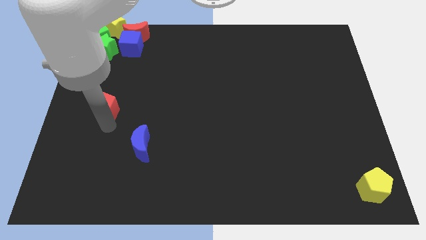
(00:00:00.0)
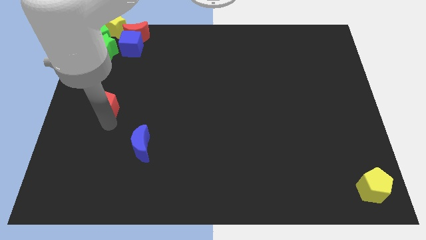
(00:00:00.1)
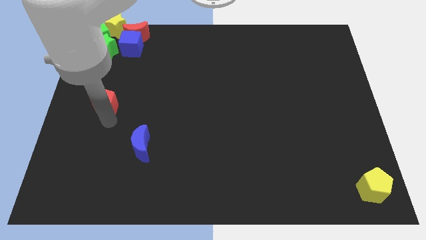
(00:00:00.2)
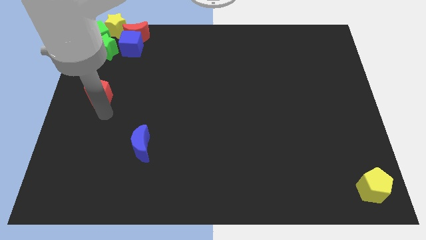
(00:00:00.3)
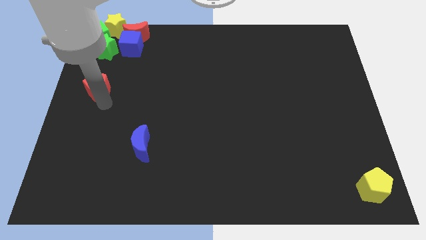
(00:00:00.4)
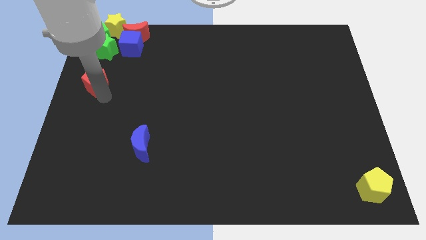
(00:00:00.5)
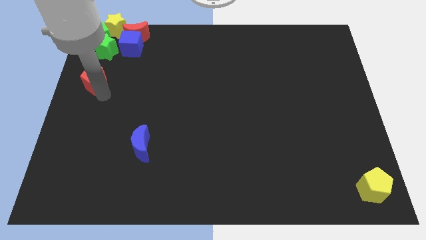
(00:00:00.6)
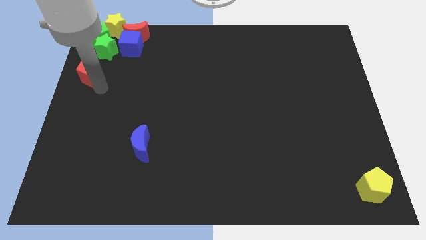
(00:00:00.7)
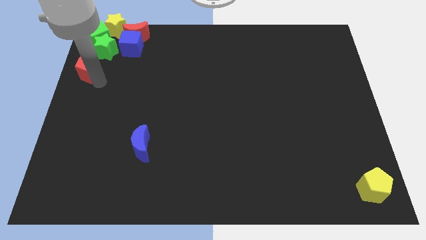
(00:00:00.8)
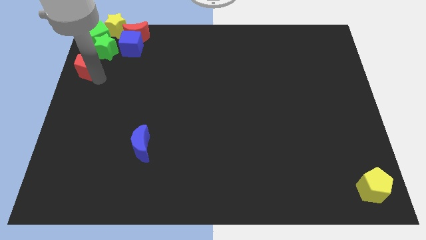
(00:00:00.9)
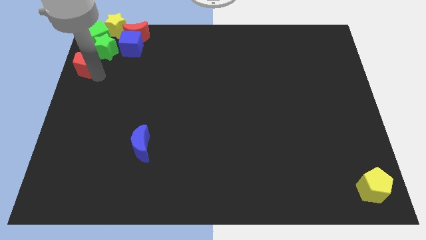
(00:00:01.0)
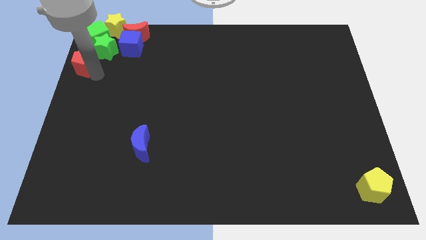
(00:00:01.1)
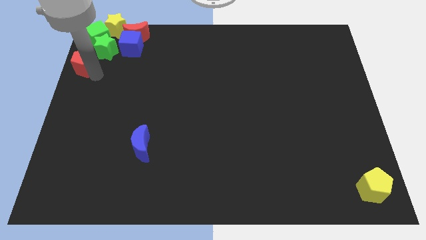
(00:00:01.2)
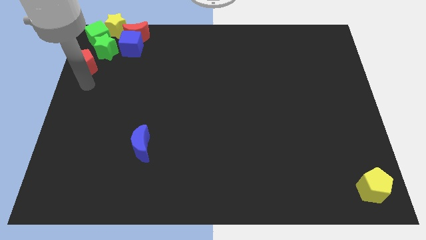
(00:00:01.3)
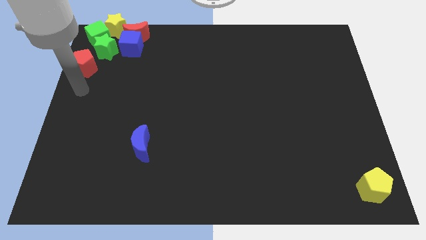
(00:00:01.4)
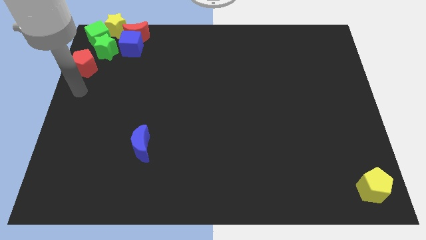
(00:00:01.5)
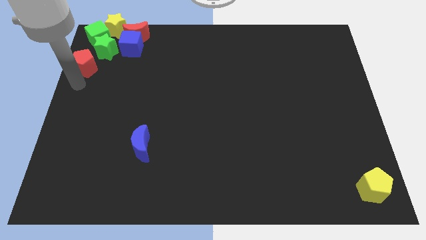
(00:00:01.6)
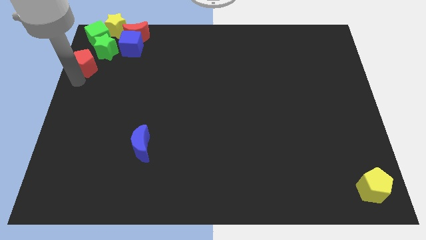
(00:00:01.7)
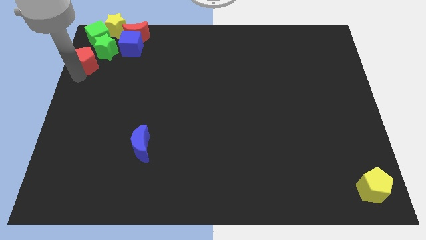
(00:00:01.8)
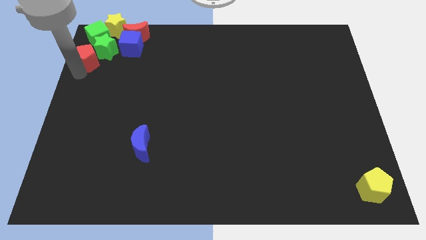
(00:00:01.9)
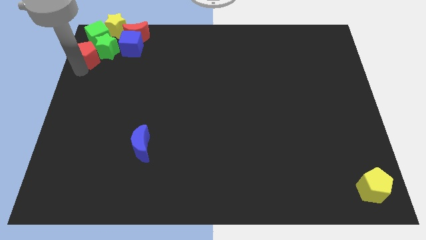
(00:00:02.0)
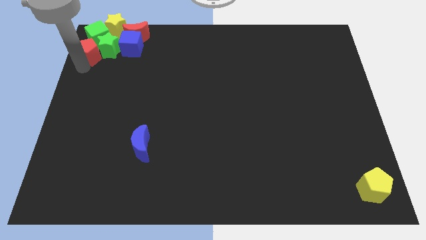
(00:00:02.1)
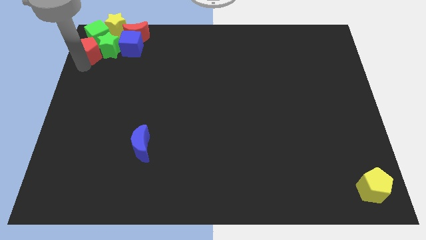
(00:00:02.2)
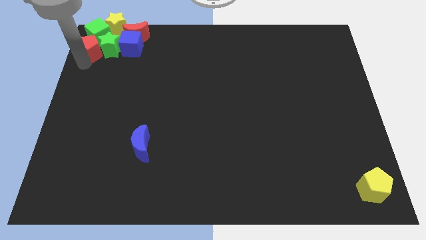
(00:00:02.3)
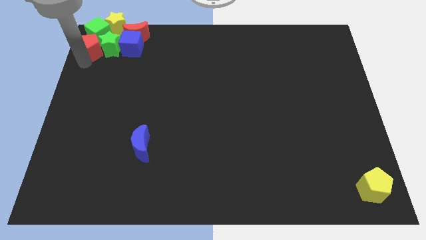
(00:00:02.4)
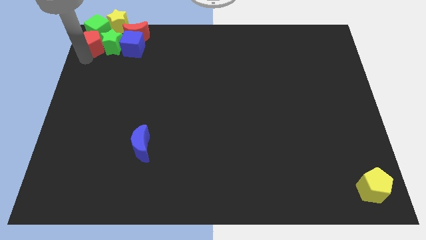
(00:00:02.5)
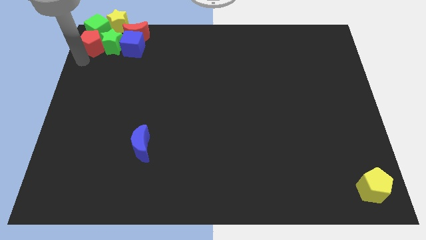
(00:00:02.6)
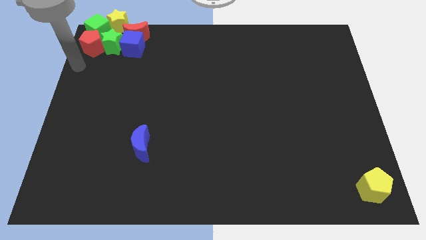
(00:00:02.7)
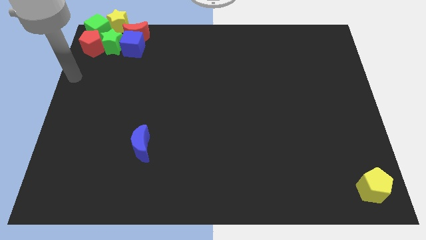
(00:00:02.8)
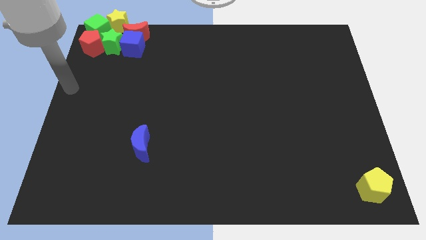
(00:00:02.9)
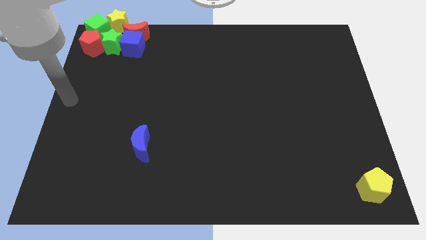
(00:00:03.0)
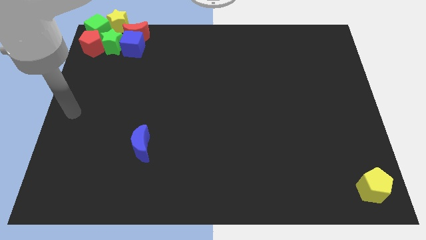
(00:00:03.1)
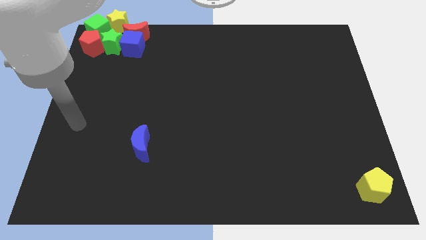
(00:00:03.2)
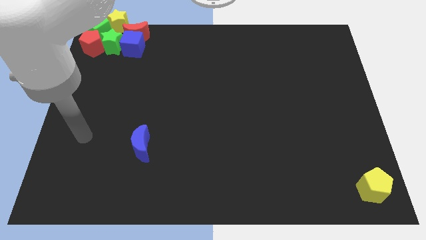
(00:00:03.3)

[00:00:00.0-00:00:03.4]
move the red pentagon towards the group of blocks

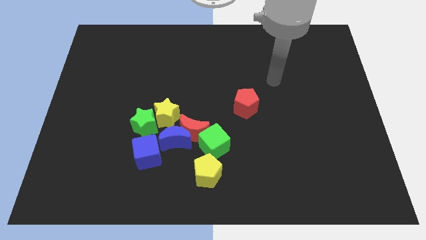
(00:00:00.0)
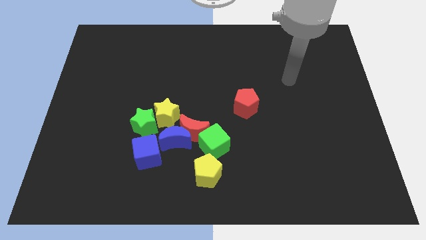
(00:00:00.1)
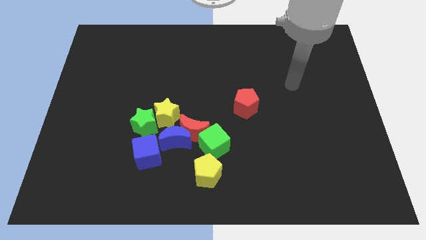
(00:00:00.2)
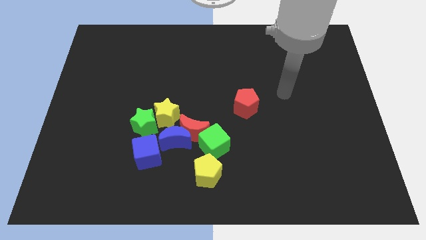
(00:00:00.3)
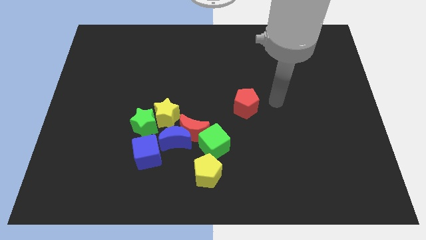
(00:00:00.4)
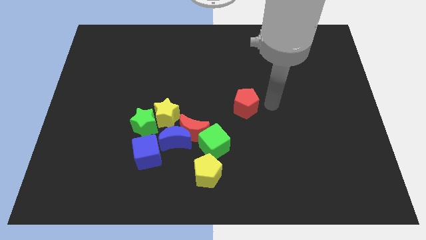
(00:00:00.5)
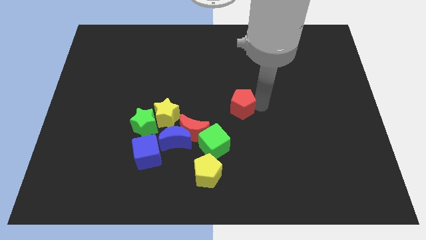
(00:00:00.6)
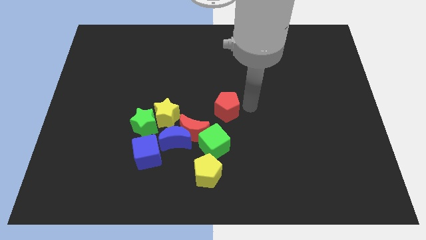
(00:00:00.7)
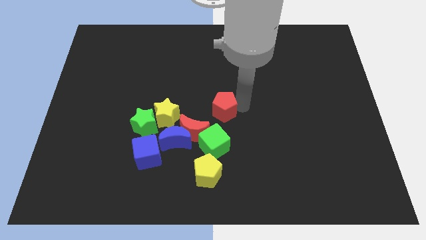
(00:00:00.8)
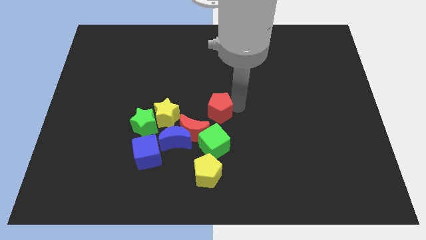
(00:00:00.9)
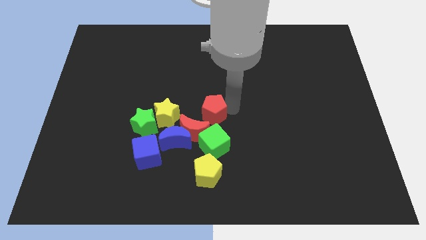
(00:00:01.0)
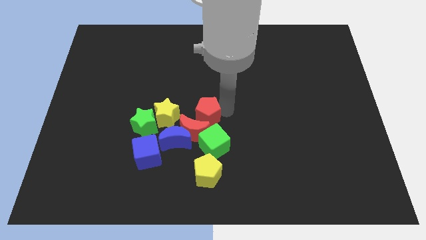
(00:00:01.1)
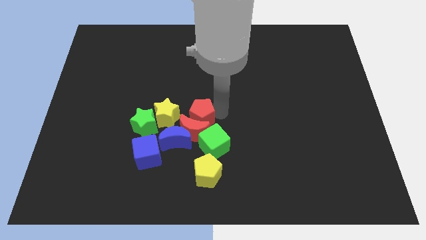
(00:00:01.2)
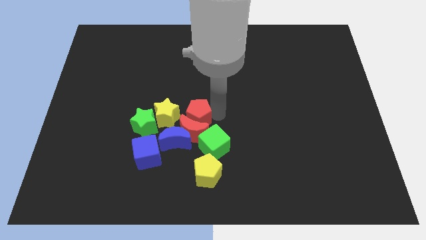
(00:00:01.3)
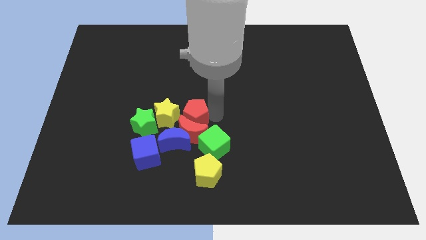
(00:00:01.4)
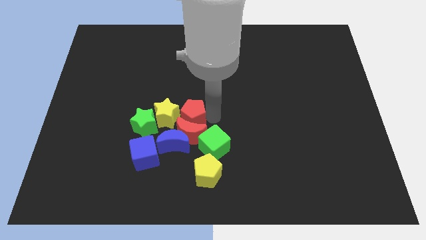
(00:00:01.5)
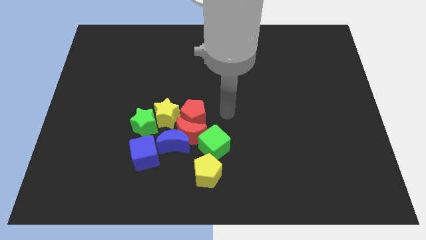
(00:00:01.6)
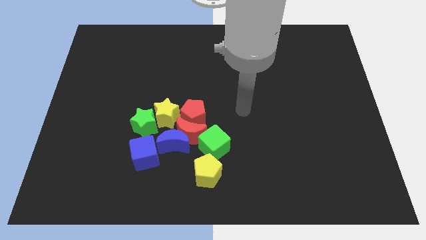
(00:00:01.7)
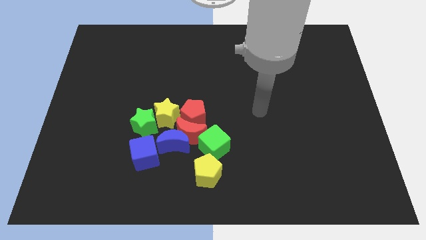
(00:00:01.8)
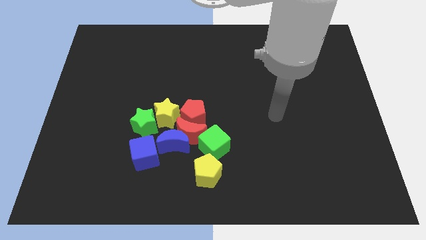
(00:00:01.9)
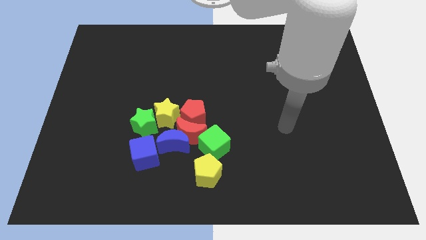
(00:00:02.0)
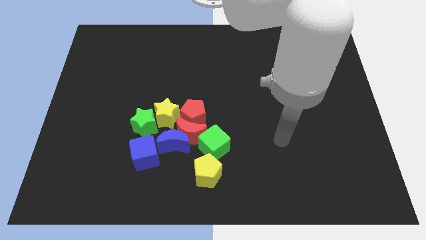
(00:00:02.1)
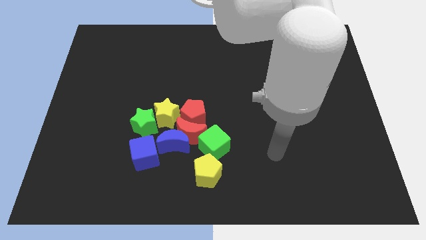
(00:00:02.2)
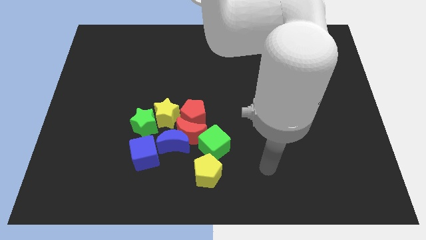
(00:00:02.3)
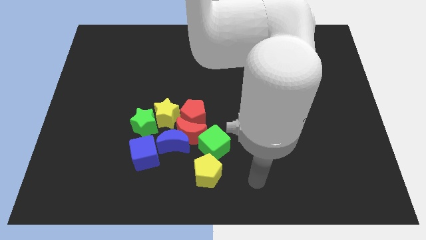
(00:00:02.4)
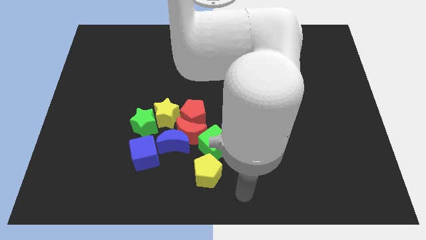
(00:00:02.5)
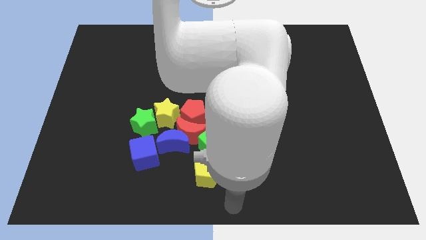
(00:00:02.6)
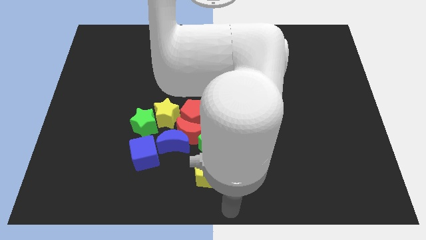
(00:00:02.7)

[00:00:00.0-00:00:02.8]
push the red pentagon into the red moon

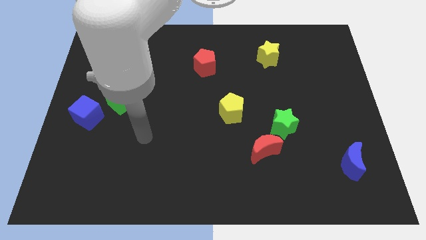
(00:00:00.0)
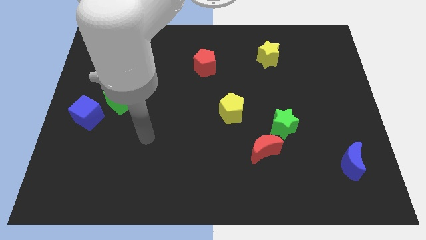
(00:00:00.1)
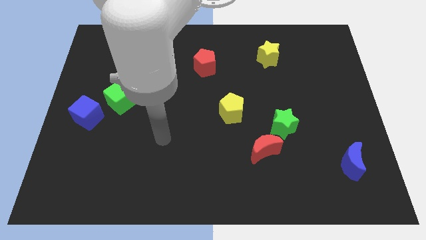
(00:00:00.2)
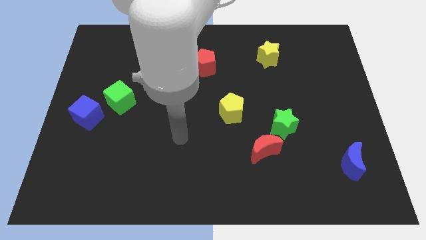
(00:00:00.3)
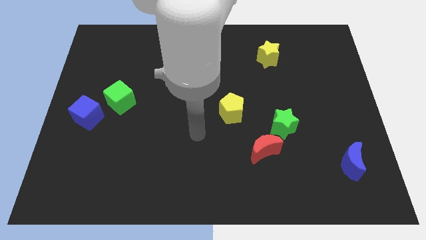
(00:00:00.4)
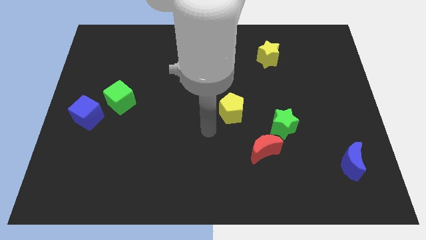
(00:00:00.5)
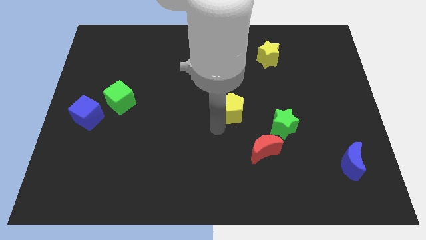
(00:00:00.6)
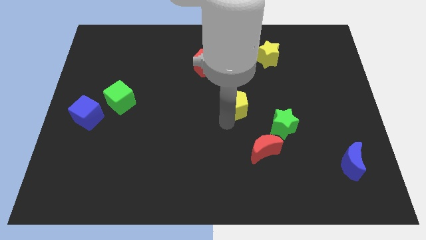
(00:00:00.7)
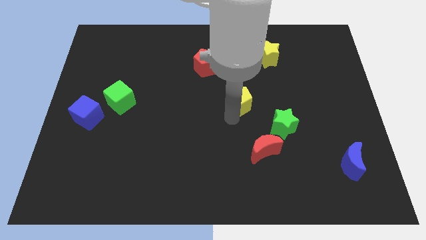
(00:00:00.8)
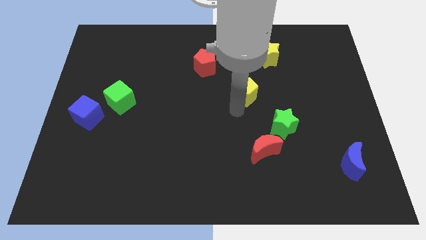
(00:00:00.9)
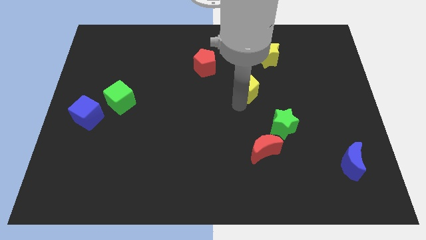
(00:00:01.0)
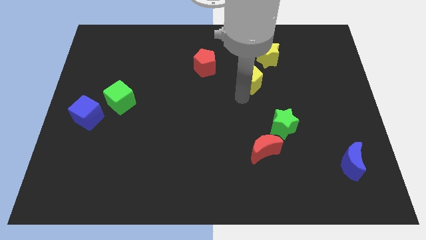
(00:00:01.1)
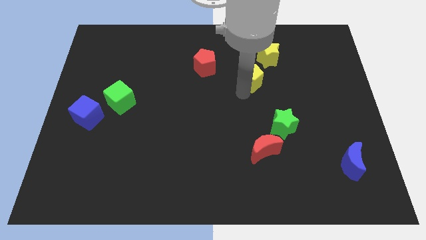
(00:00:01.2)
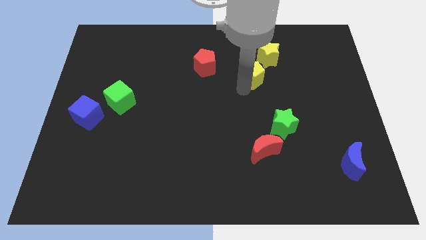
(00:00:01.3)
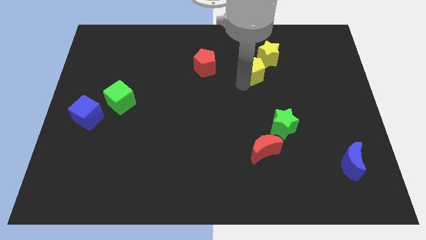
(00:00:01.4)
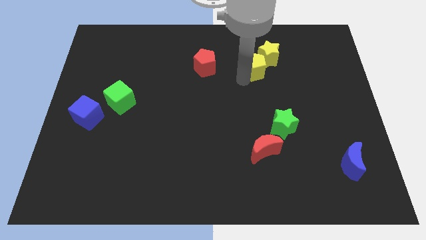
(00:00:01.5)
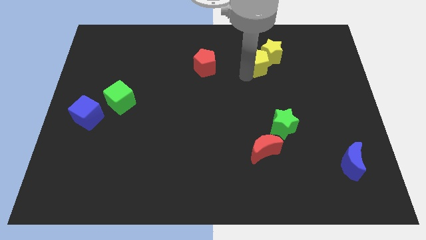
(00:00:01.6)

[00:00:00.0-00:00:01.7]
move yellow pentagon into the yellow star

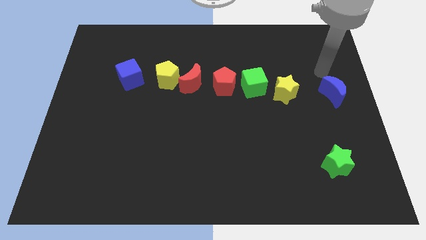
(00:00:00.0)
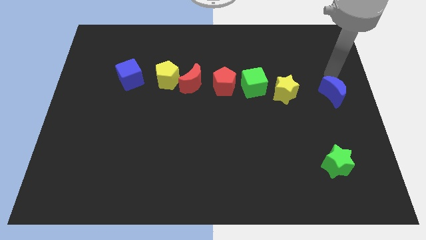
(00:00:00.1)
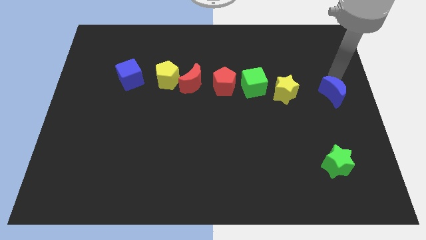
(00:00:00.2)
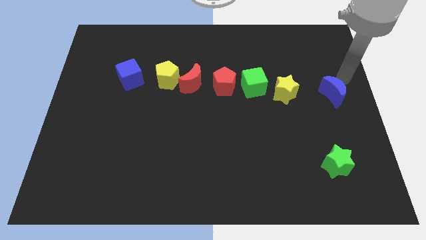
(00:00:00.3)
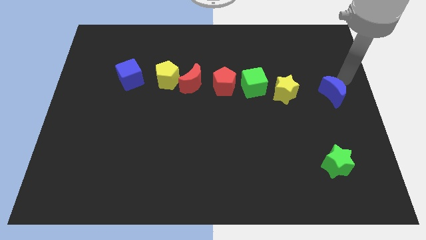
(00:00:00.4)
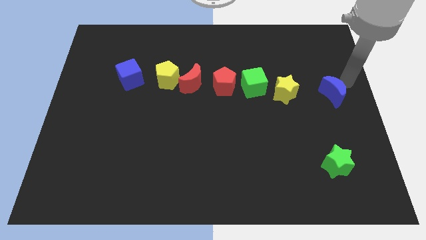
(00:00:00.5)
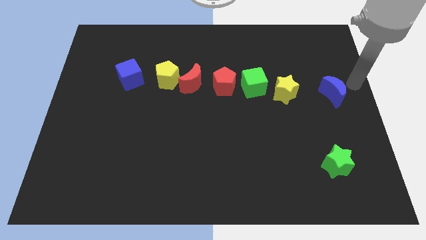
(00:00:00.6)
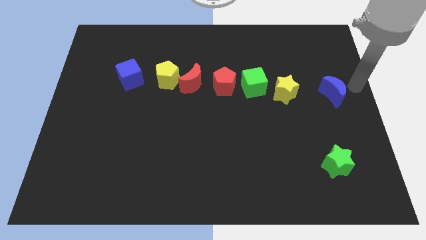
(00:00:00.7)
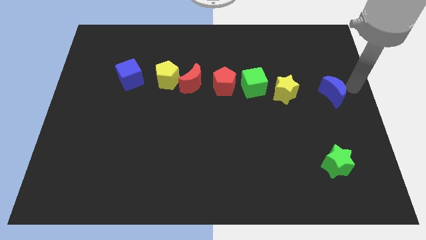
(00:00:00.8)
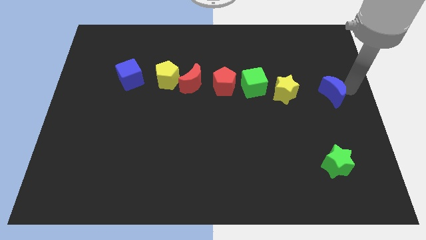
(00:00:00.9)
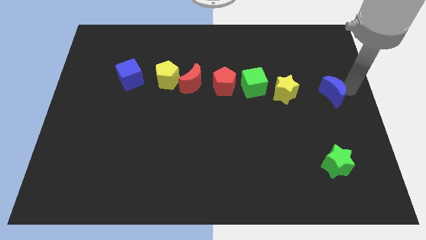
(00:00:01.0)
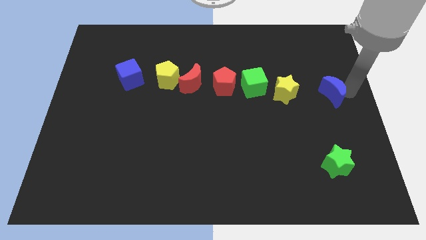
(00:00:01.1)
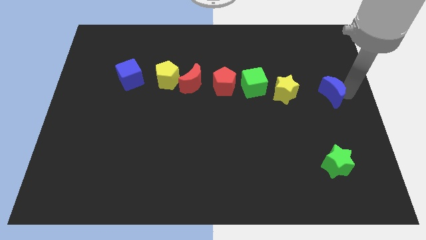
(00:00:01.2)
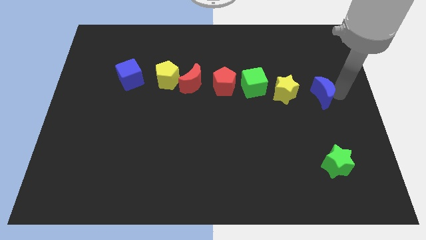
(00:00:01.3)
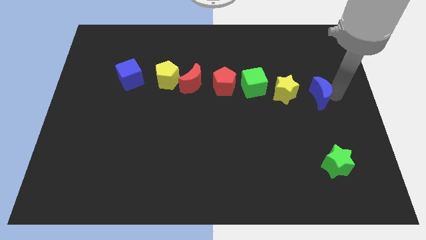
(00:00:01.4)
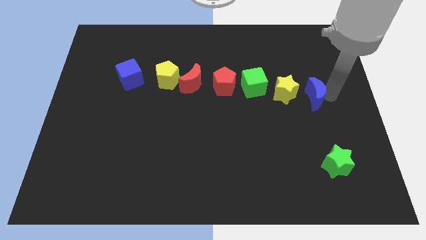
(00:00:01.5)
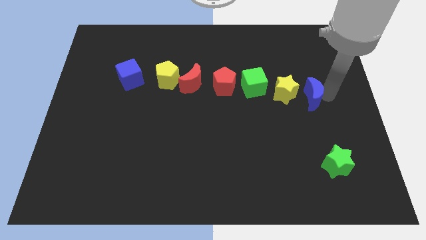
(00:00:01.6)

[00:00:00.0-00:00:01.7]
push the blue moon closer to the yellow star
